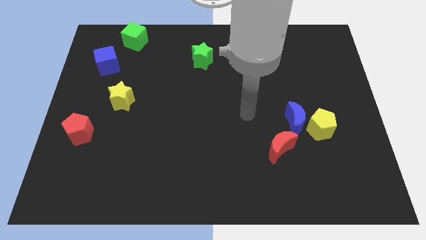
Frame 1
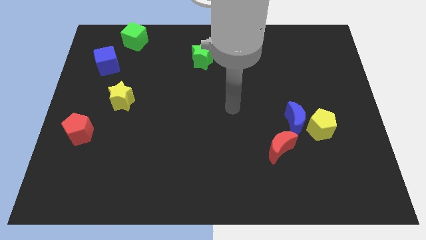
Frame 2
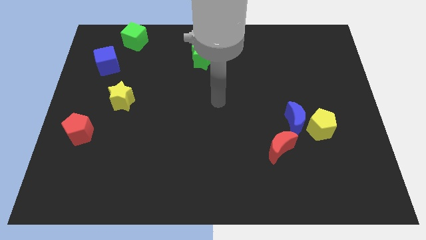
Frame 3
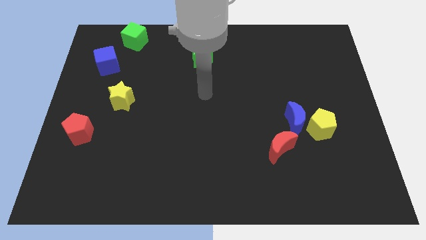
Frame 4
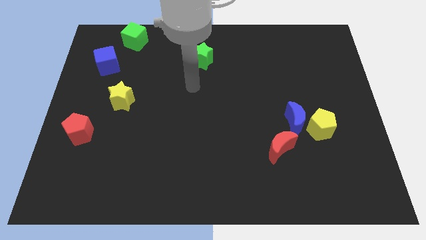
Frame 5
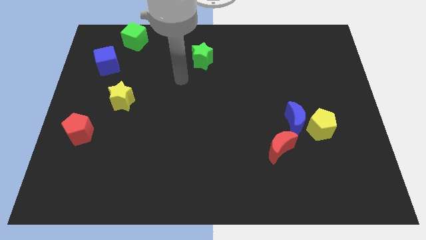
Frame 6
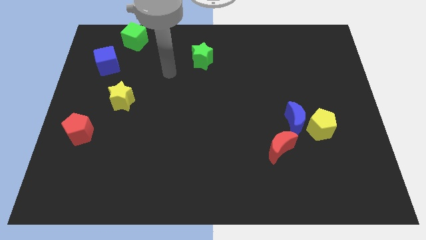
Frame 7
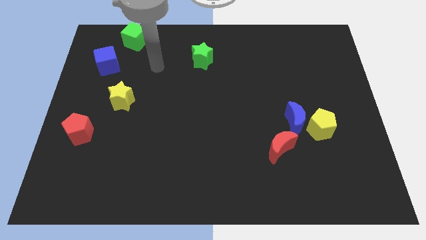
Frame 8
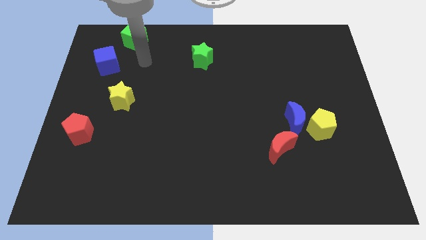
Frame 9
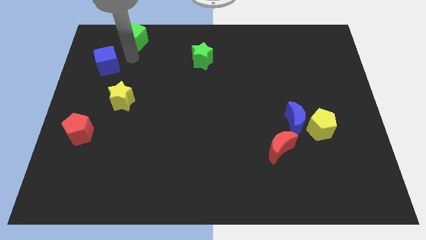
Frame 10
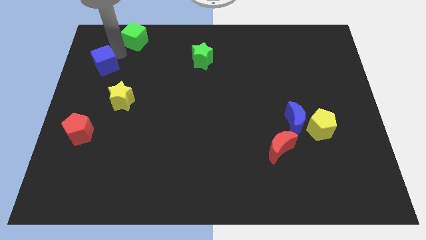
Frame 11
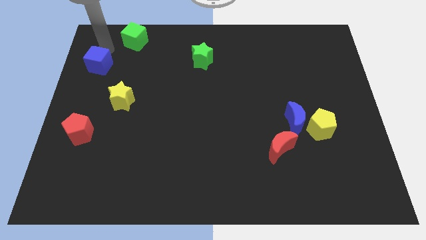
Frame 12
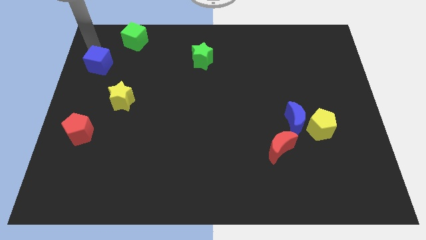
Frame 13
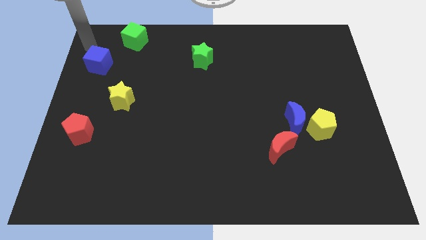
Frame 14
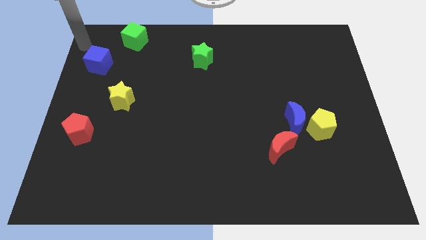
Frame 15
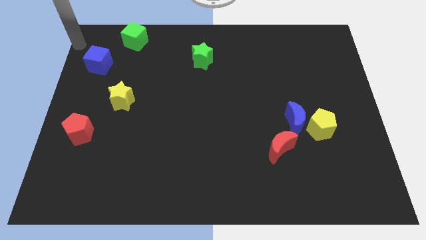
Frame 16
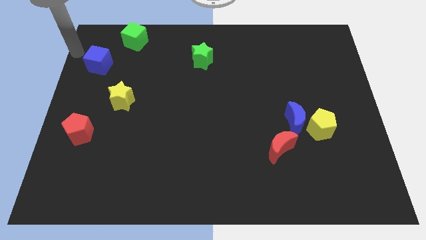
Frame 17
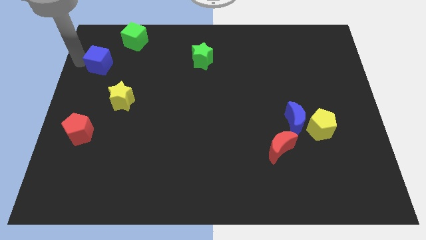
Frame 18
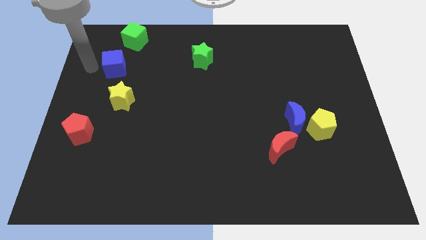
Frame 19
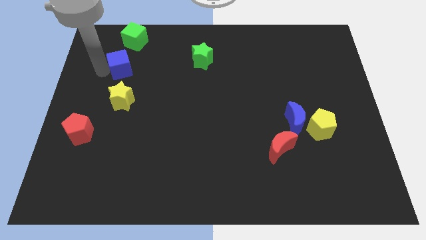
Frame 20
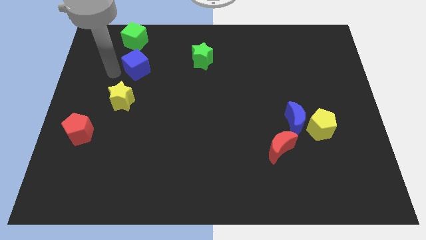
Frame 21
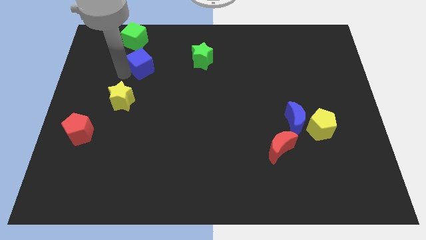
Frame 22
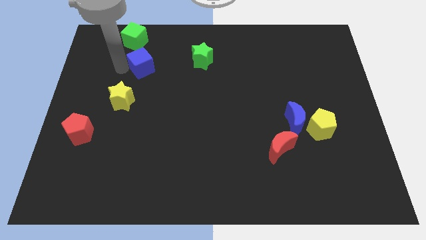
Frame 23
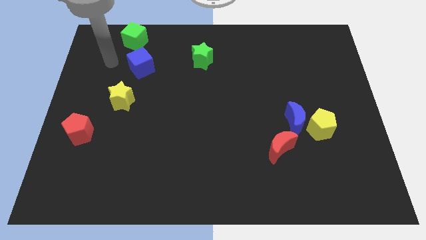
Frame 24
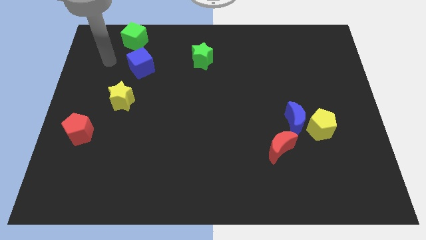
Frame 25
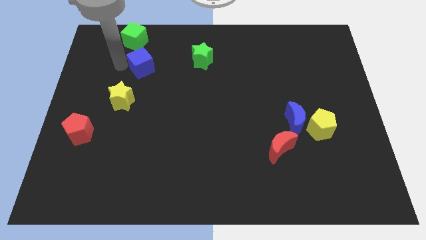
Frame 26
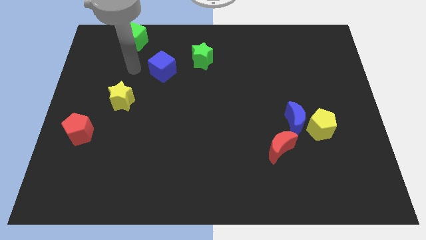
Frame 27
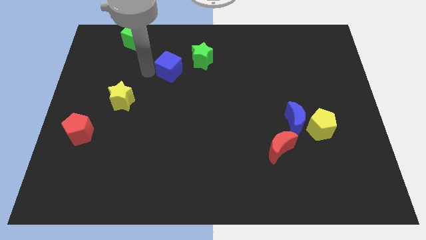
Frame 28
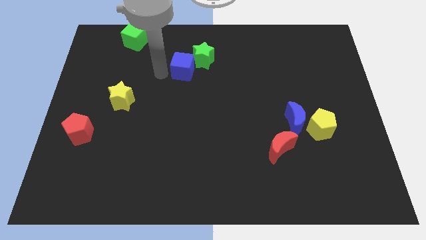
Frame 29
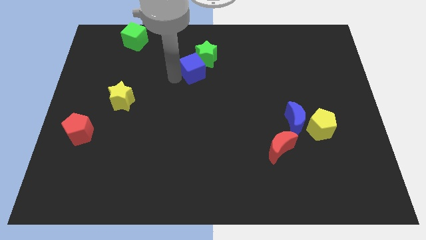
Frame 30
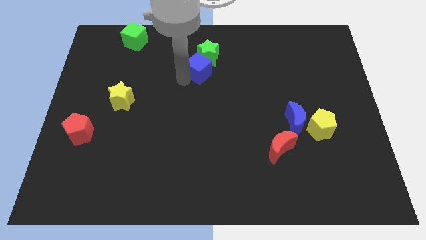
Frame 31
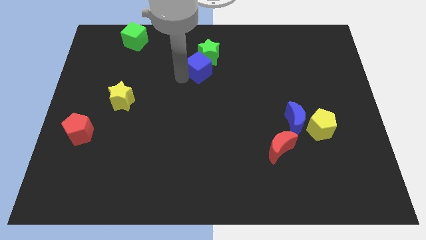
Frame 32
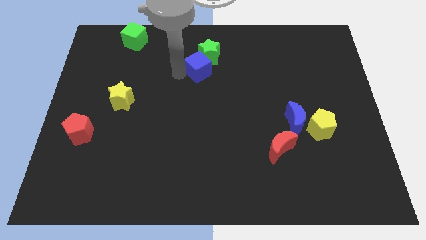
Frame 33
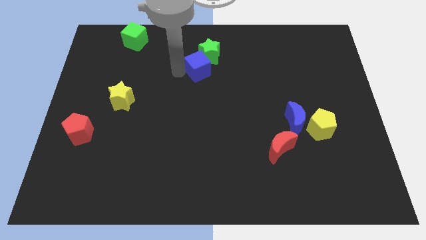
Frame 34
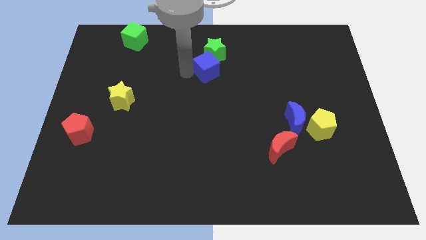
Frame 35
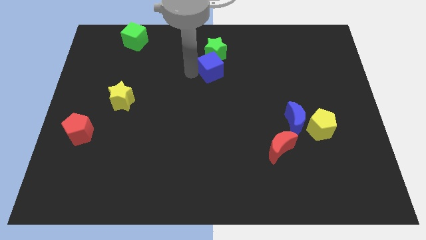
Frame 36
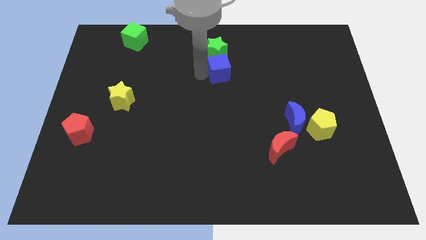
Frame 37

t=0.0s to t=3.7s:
place the blue cube below the green star

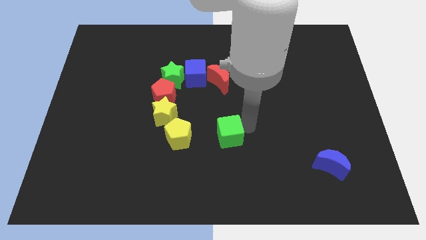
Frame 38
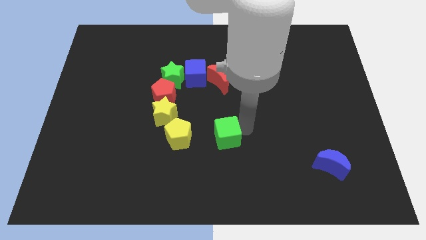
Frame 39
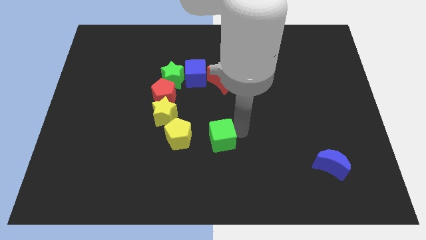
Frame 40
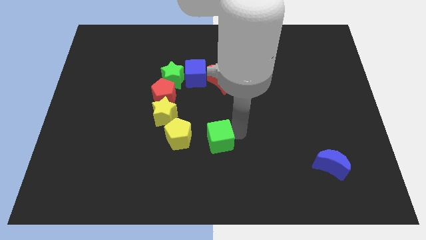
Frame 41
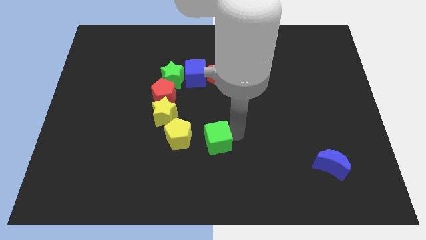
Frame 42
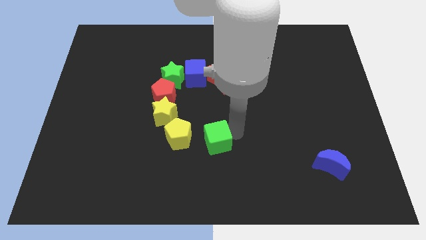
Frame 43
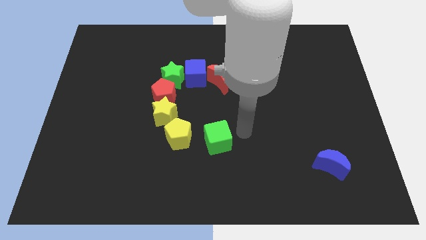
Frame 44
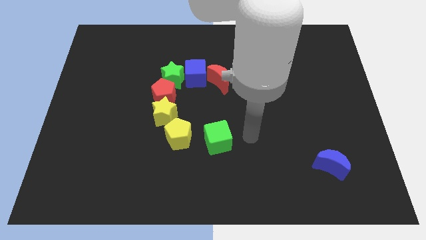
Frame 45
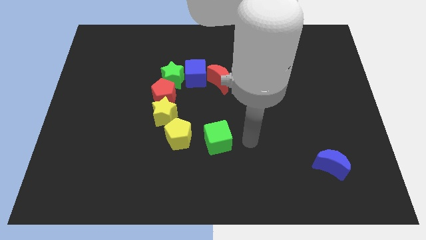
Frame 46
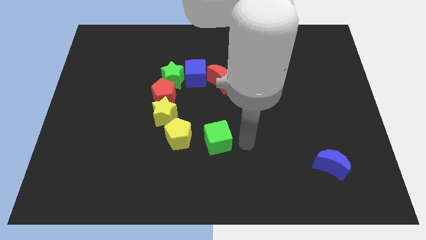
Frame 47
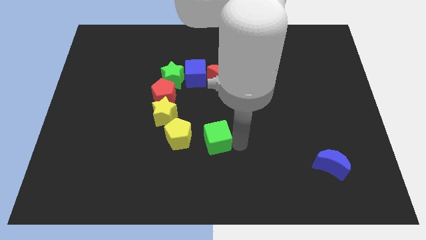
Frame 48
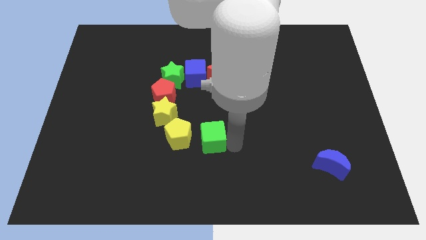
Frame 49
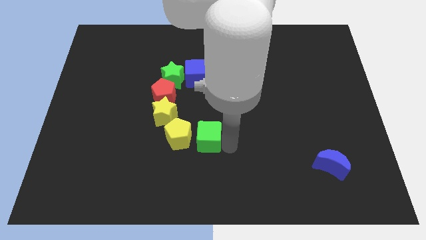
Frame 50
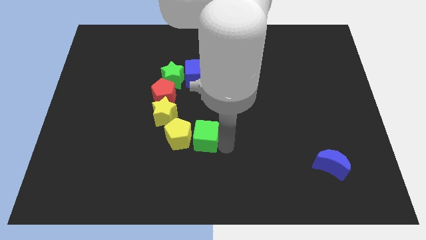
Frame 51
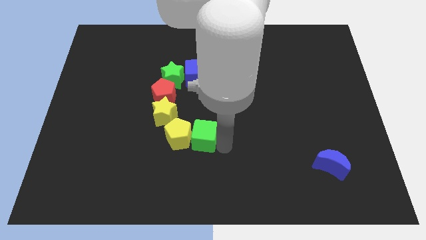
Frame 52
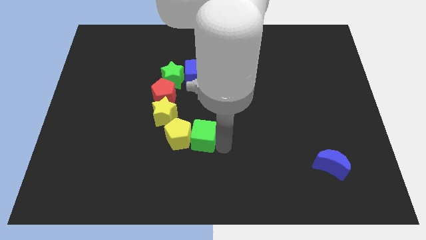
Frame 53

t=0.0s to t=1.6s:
push green cube to the right of the yellow pentagon

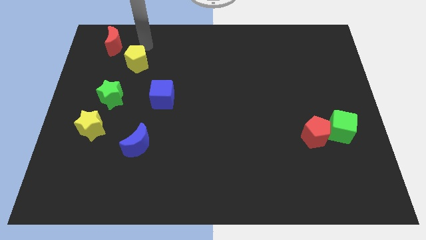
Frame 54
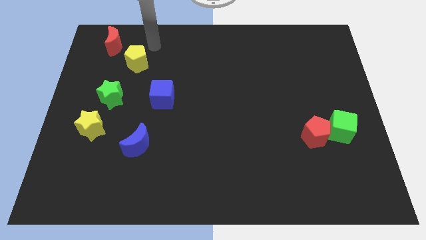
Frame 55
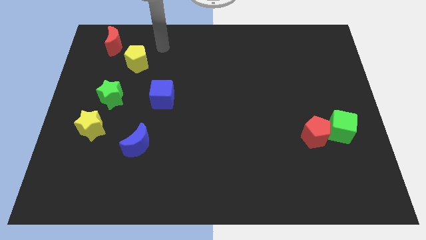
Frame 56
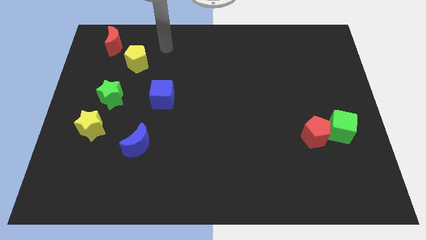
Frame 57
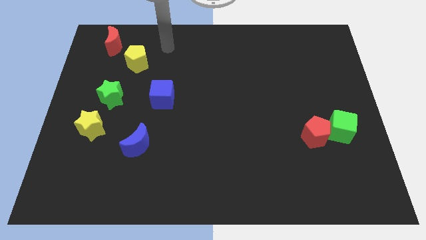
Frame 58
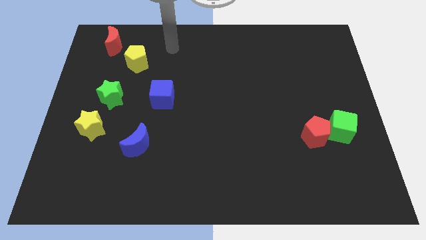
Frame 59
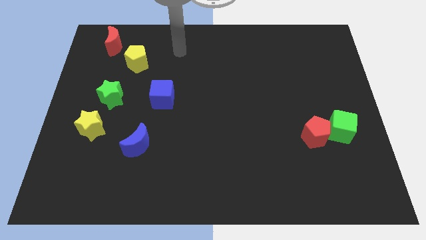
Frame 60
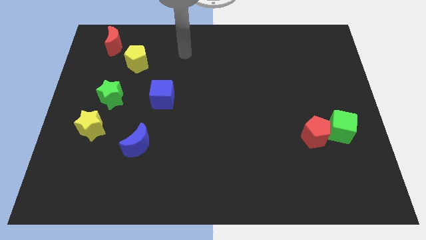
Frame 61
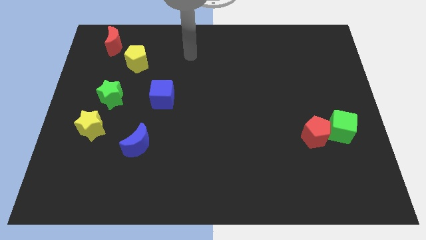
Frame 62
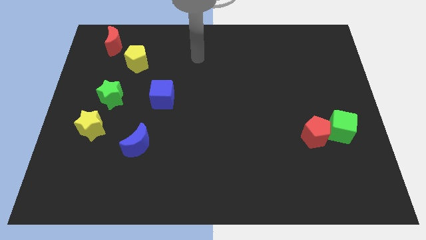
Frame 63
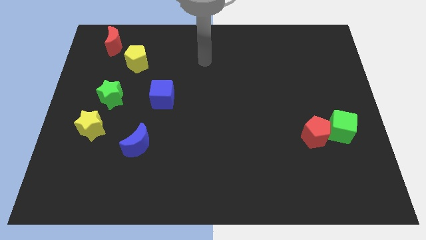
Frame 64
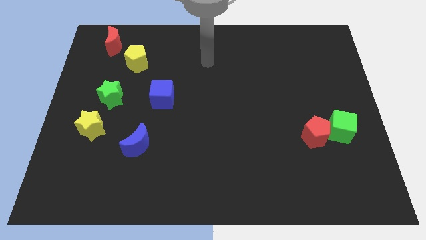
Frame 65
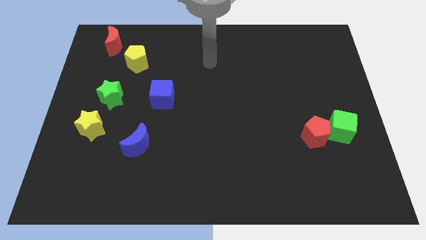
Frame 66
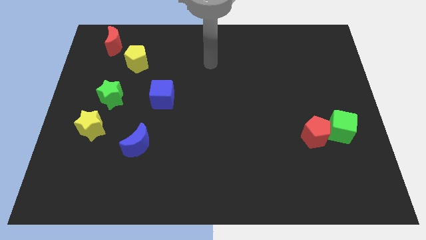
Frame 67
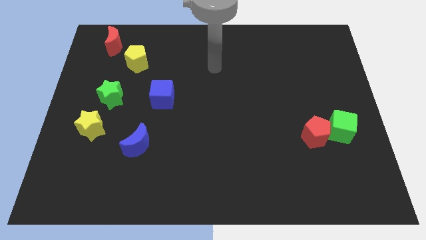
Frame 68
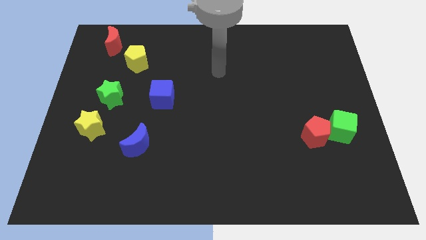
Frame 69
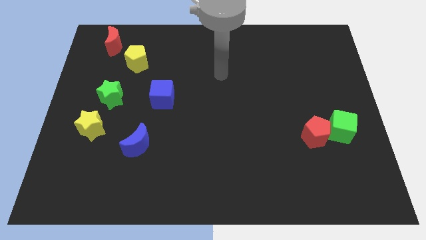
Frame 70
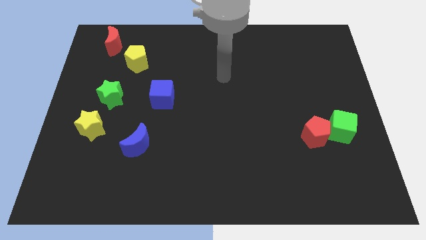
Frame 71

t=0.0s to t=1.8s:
point your arm at the center of the board

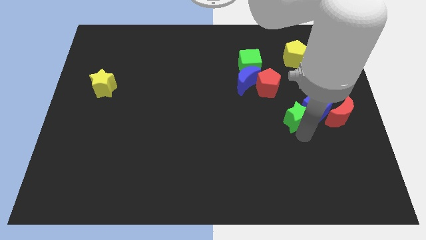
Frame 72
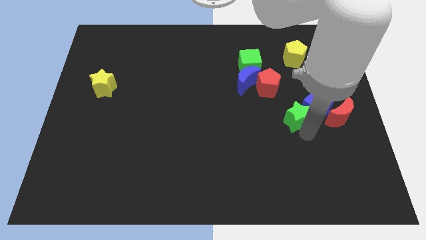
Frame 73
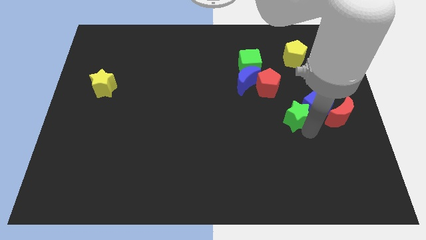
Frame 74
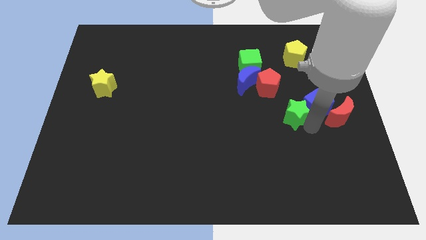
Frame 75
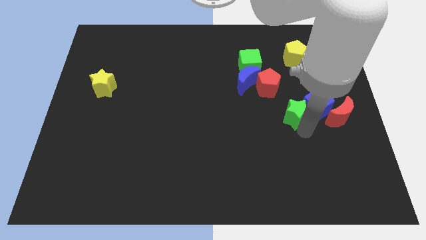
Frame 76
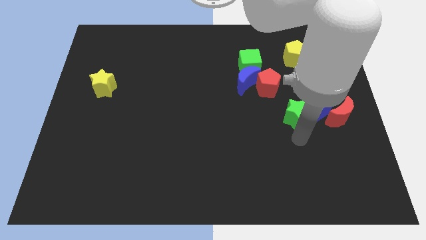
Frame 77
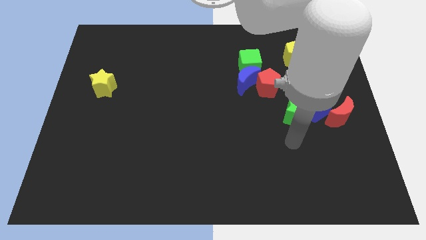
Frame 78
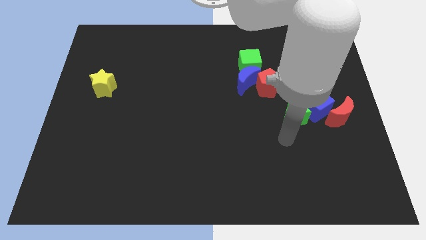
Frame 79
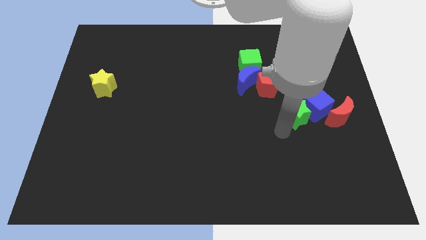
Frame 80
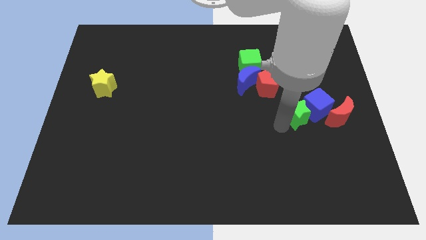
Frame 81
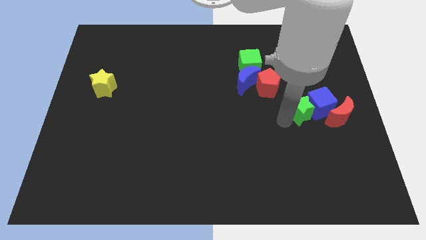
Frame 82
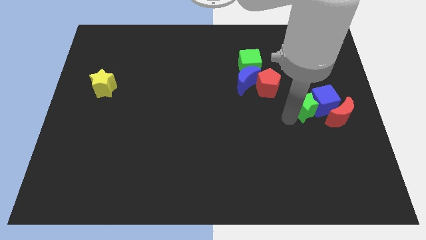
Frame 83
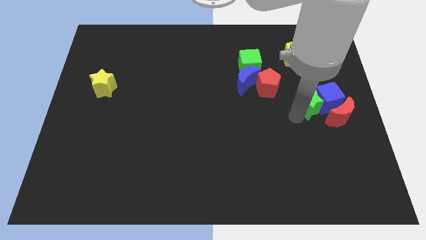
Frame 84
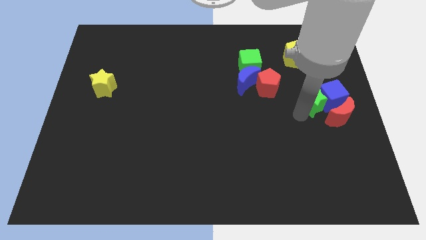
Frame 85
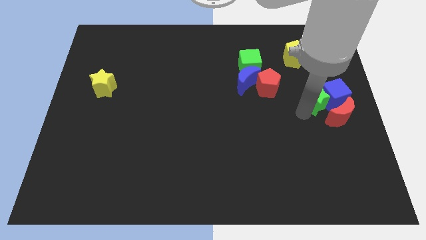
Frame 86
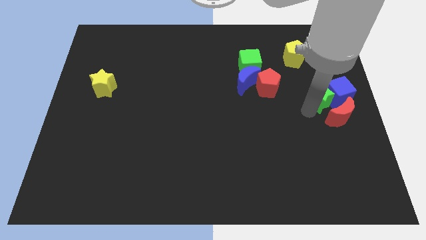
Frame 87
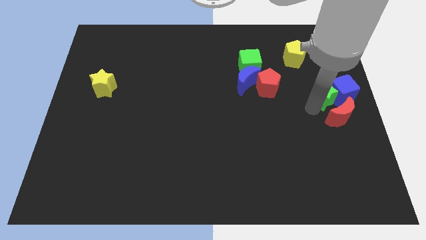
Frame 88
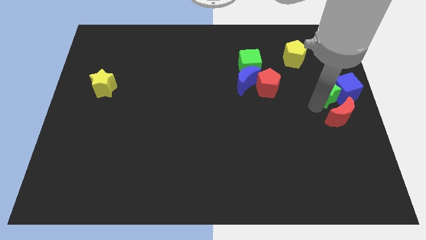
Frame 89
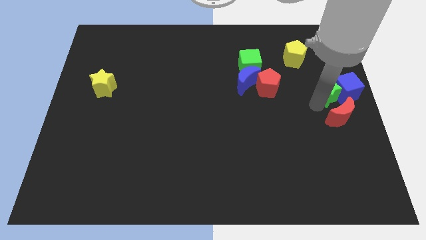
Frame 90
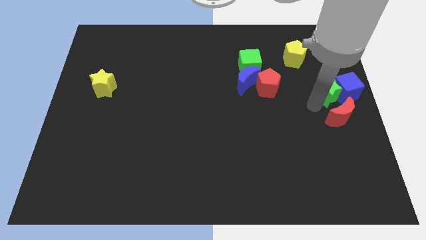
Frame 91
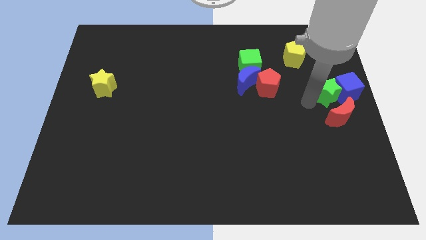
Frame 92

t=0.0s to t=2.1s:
push the blue cube with the help of the green star towards the right center of the board
